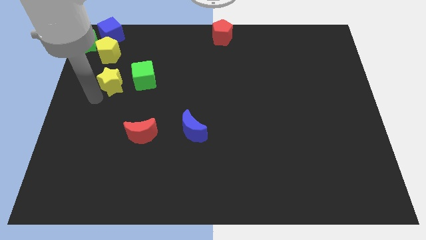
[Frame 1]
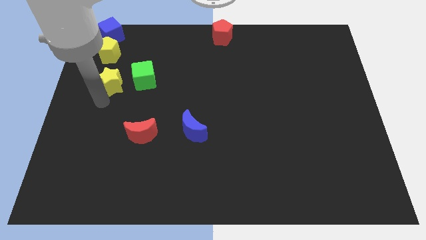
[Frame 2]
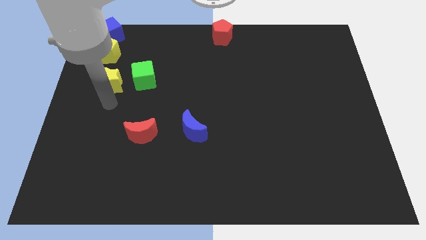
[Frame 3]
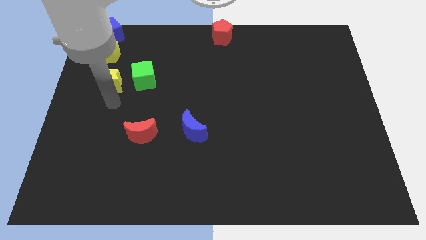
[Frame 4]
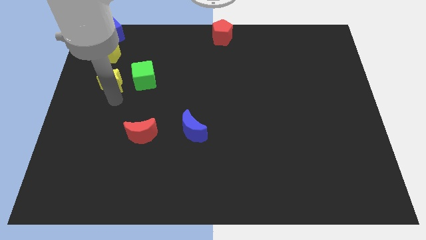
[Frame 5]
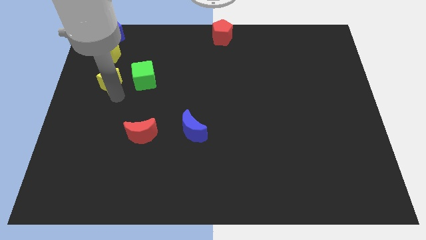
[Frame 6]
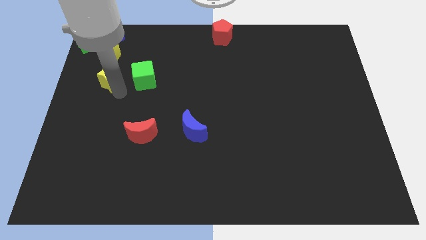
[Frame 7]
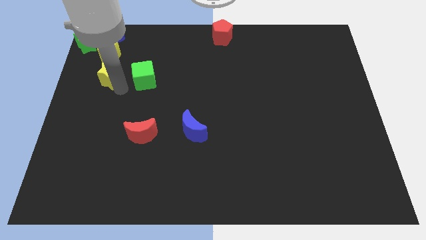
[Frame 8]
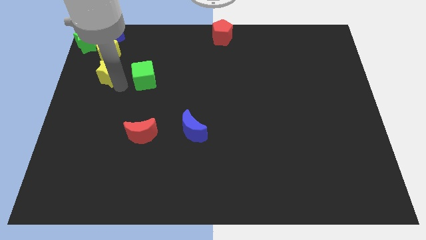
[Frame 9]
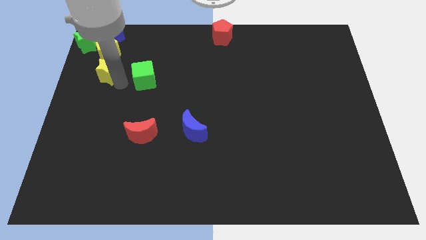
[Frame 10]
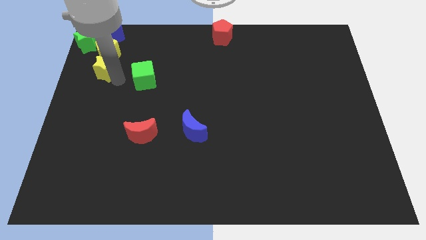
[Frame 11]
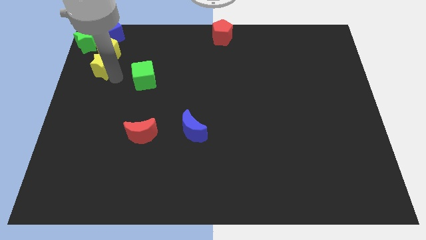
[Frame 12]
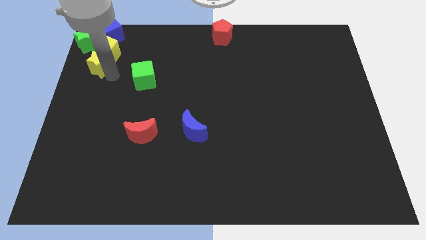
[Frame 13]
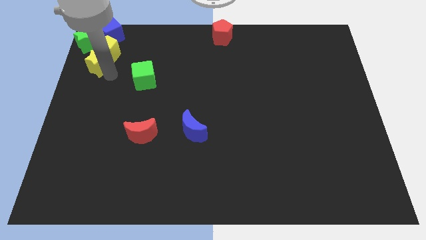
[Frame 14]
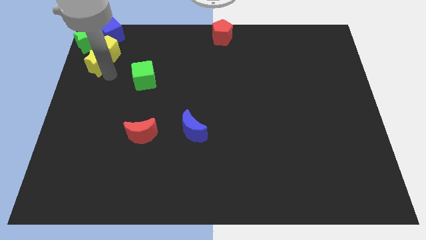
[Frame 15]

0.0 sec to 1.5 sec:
move the yellow star into the yellow pentagon

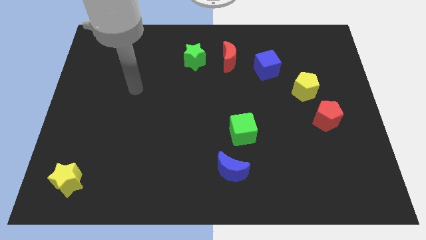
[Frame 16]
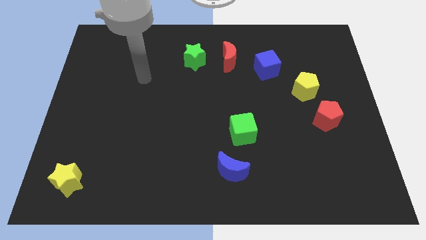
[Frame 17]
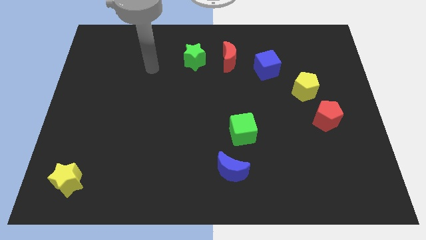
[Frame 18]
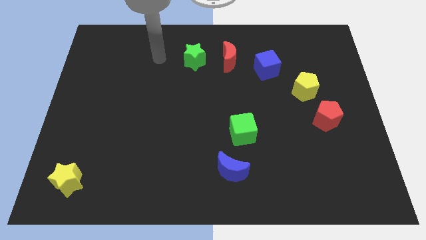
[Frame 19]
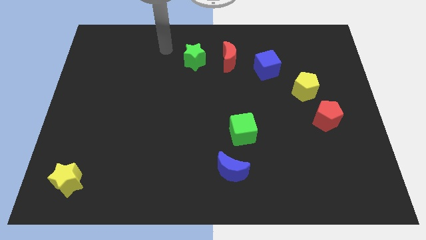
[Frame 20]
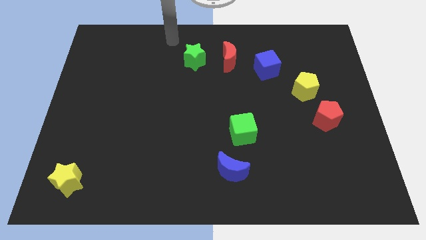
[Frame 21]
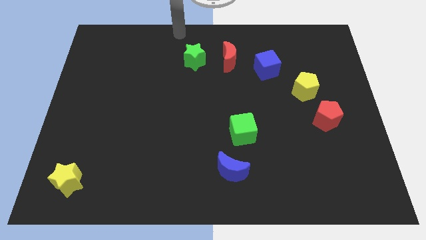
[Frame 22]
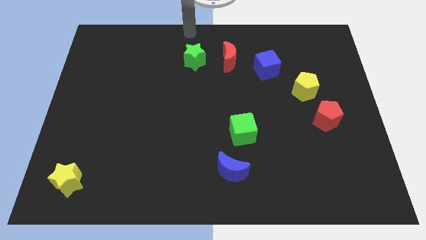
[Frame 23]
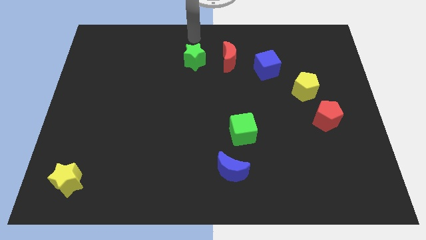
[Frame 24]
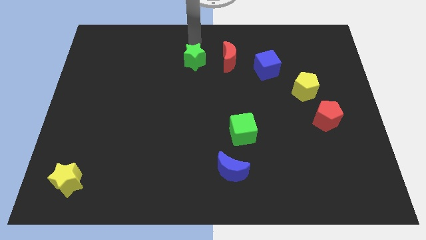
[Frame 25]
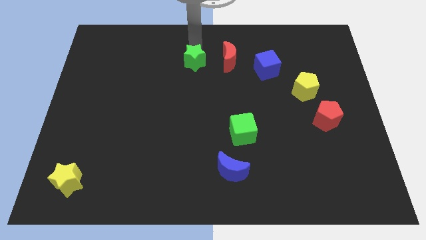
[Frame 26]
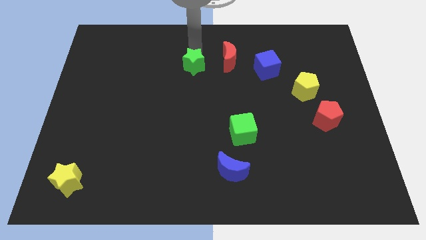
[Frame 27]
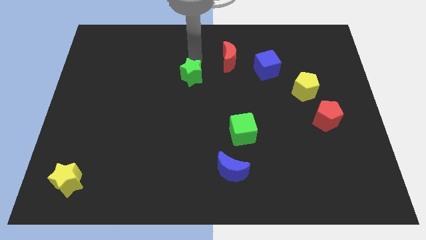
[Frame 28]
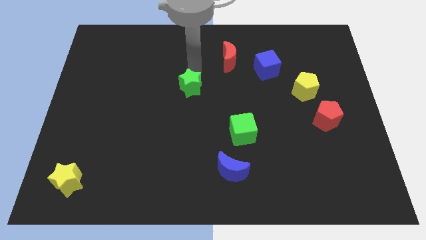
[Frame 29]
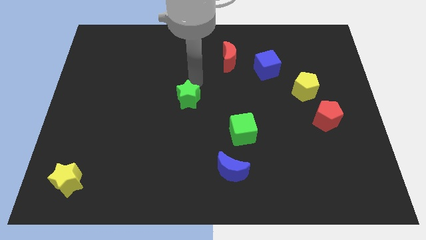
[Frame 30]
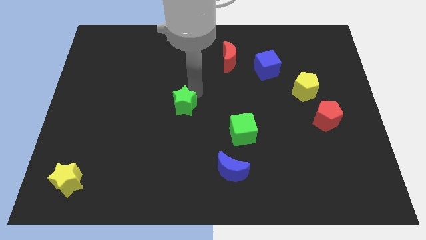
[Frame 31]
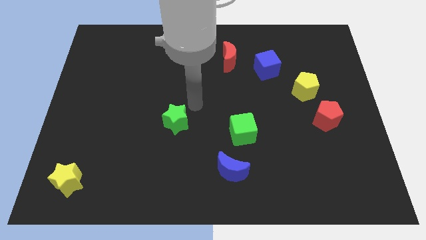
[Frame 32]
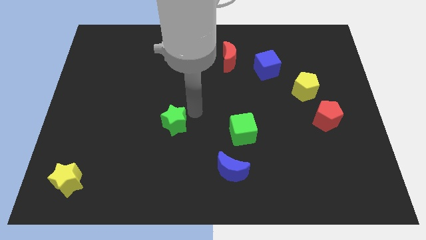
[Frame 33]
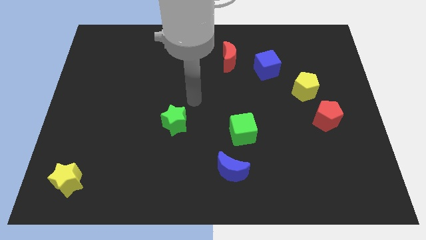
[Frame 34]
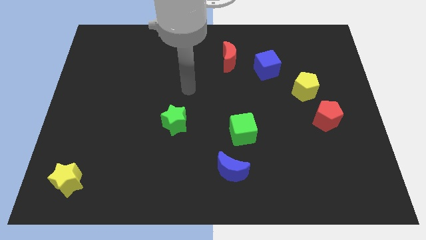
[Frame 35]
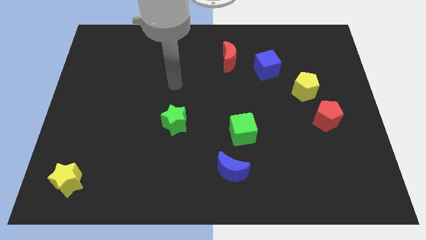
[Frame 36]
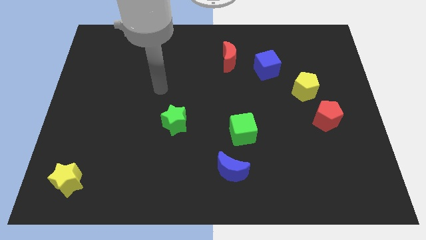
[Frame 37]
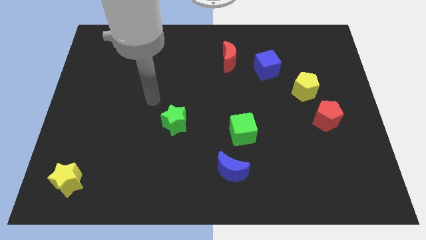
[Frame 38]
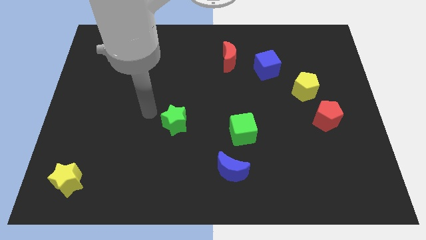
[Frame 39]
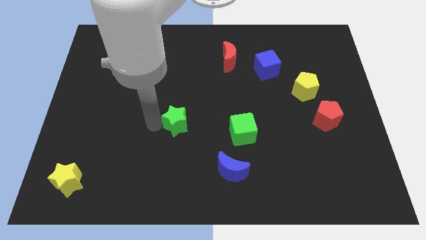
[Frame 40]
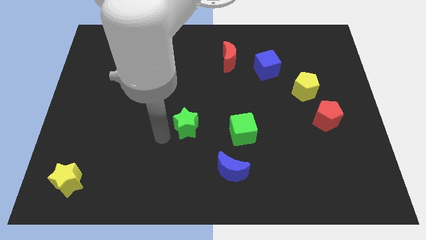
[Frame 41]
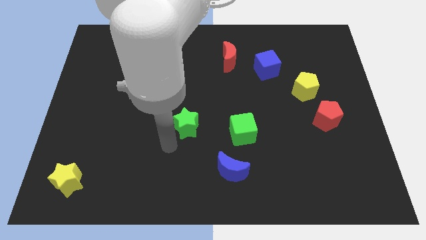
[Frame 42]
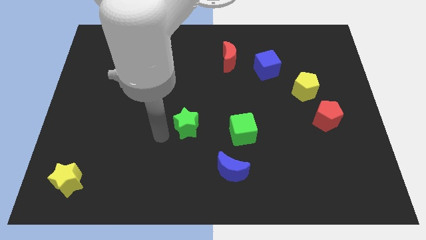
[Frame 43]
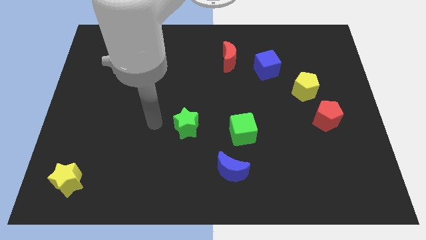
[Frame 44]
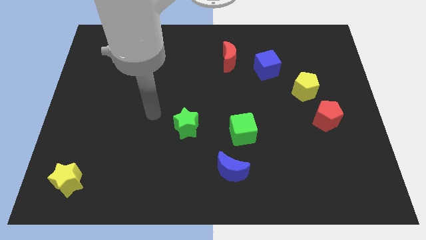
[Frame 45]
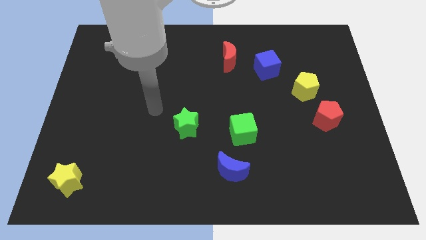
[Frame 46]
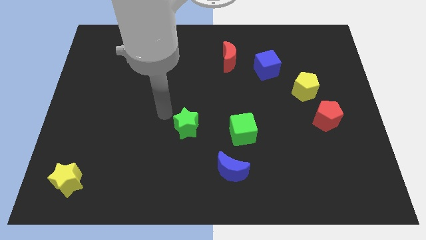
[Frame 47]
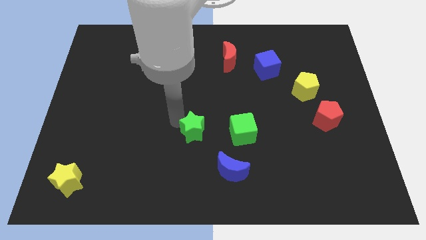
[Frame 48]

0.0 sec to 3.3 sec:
push green star to the left side of the green cube

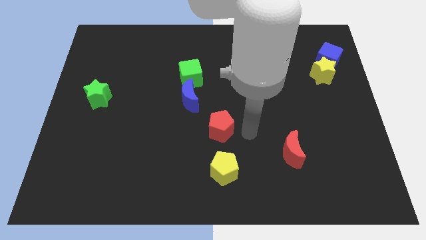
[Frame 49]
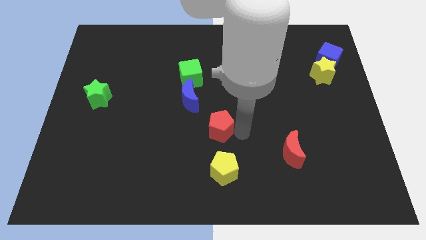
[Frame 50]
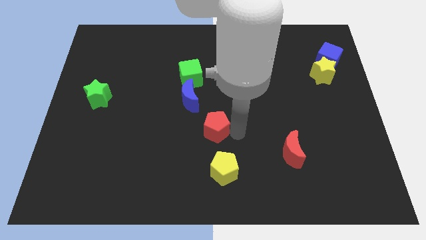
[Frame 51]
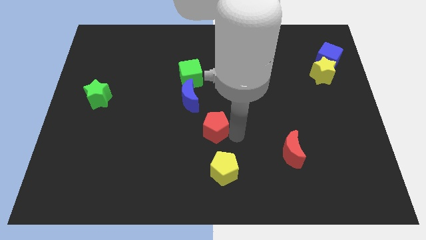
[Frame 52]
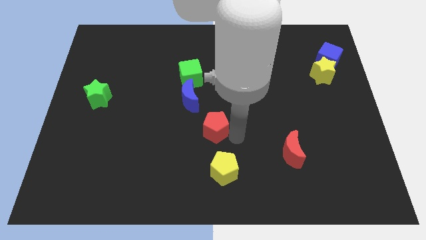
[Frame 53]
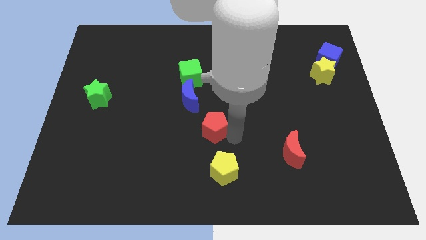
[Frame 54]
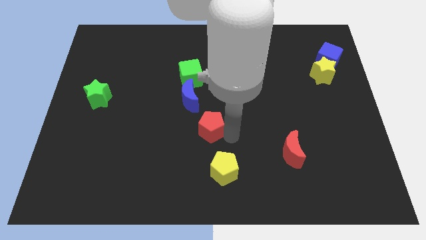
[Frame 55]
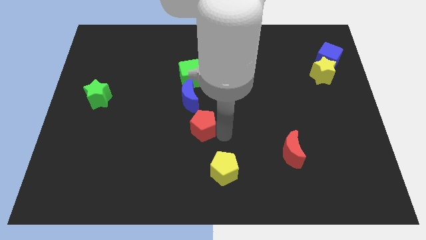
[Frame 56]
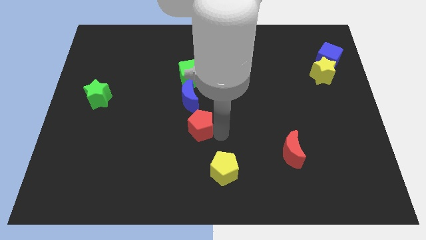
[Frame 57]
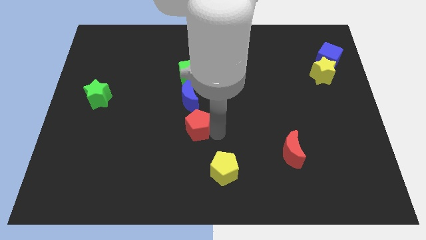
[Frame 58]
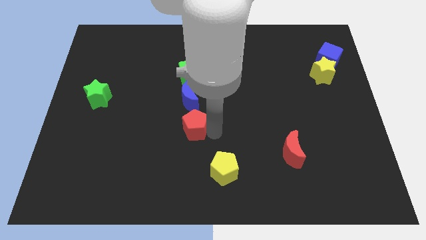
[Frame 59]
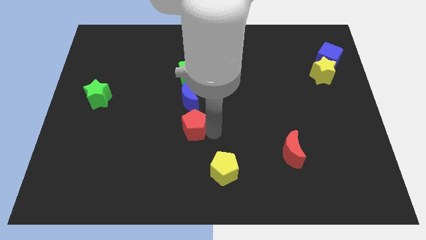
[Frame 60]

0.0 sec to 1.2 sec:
place red pentagon below the blue crescent

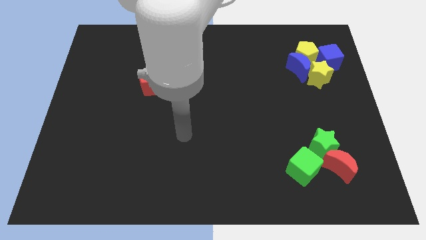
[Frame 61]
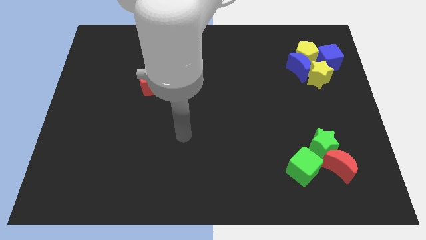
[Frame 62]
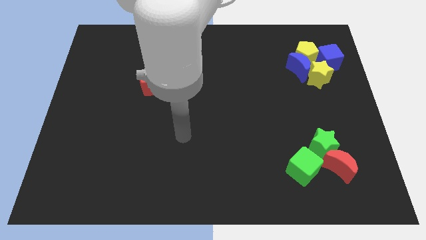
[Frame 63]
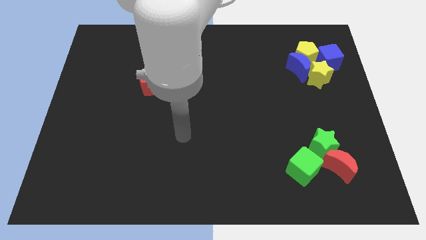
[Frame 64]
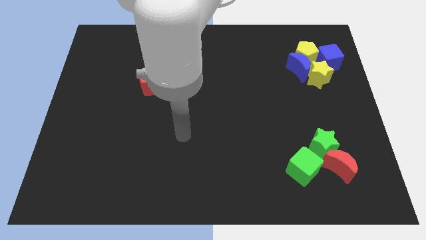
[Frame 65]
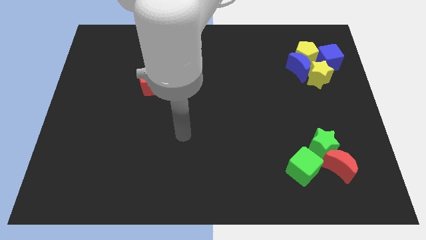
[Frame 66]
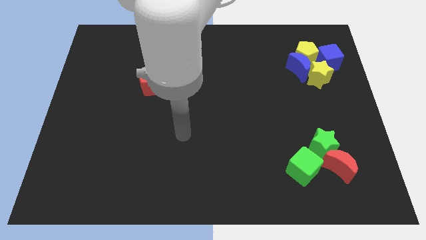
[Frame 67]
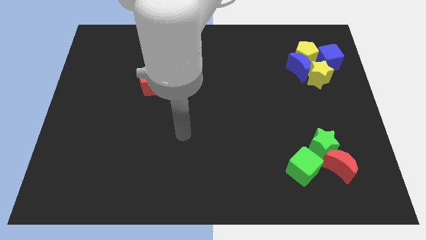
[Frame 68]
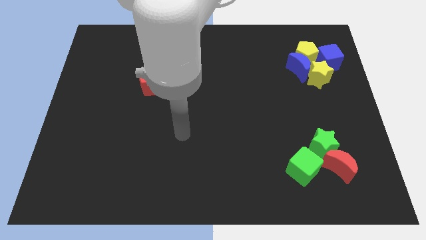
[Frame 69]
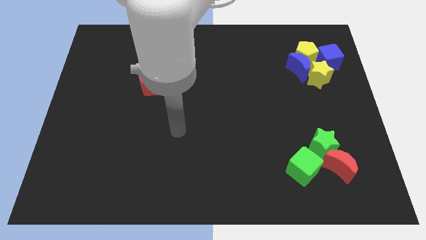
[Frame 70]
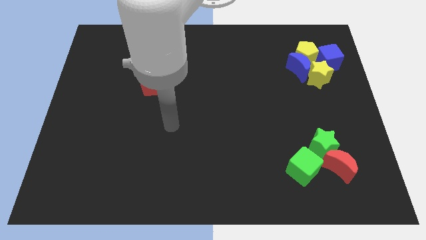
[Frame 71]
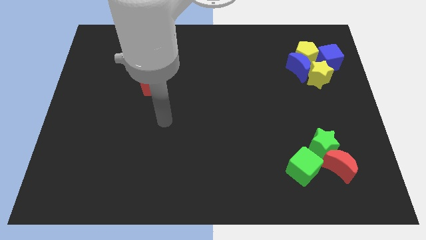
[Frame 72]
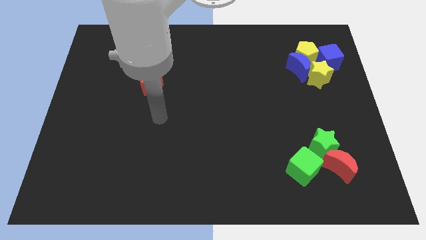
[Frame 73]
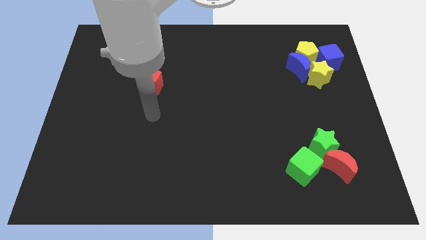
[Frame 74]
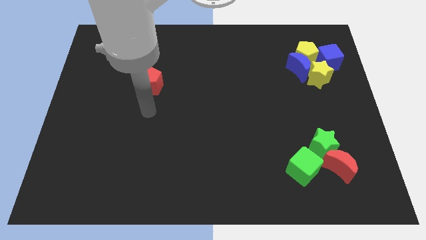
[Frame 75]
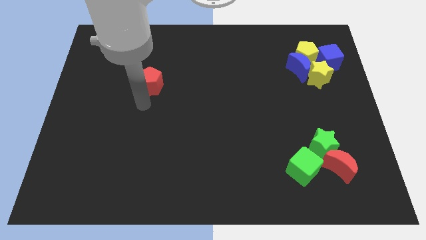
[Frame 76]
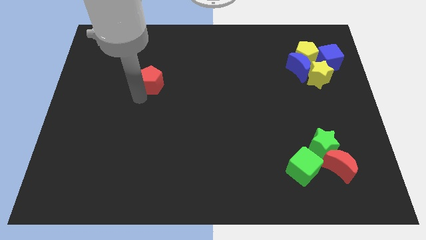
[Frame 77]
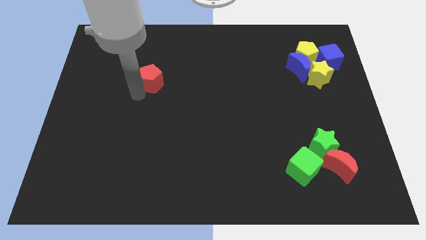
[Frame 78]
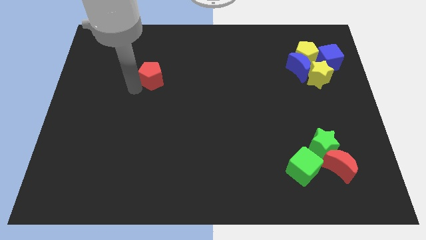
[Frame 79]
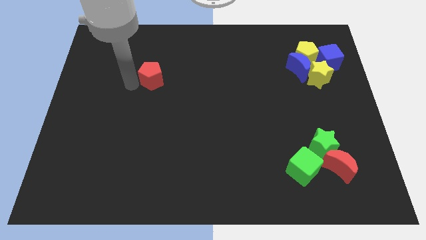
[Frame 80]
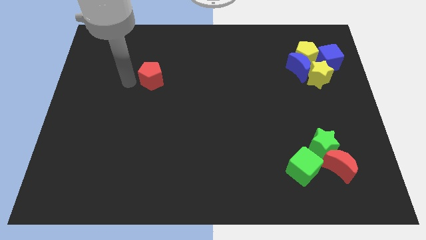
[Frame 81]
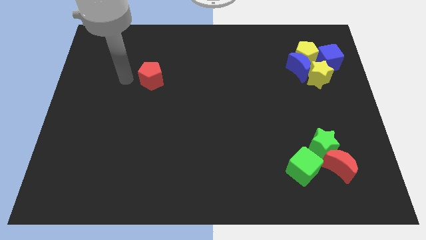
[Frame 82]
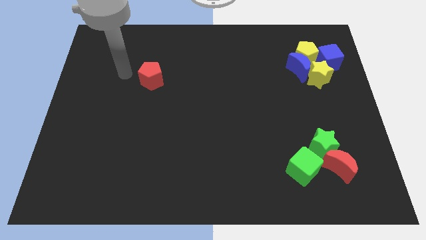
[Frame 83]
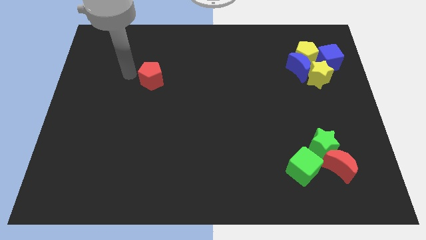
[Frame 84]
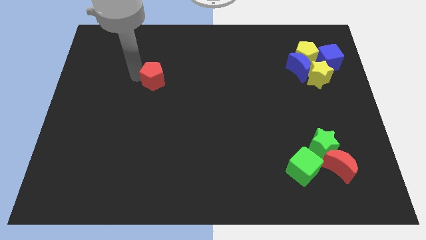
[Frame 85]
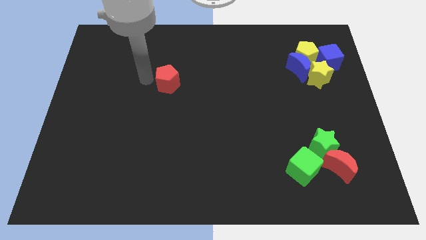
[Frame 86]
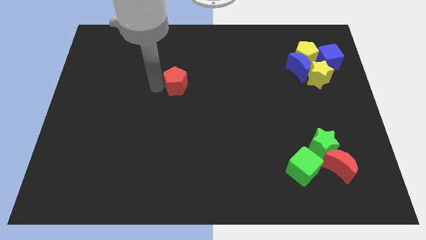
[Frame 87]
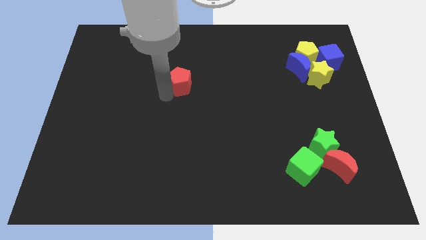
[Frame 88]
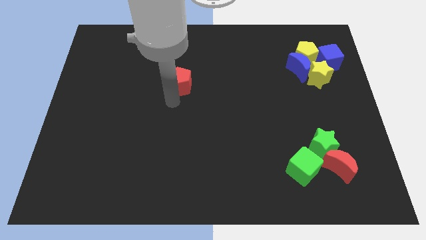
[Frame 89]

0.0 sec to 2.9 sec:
push the red pentagon slightly to the right
